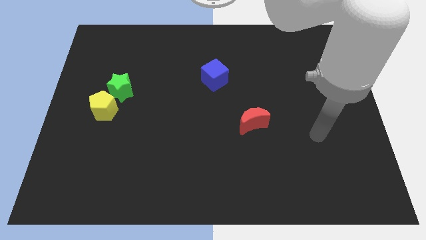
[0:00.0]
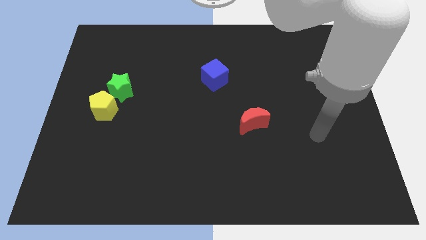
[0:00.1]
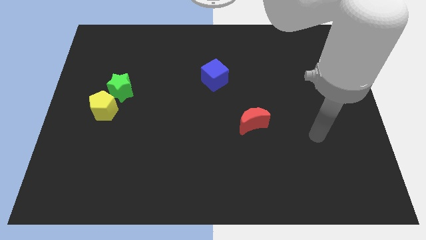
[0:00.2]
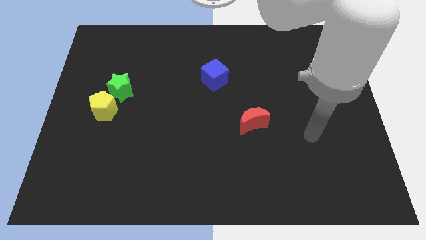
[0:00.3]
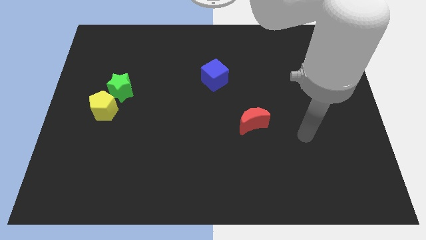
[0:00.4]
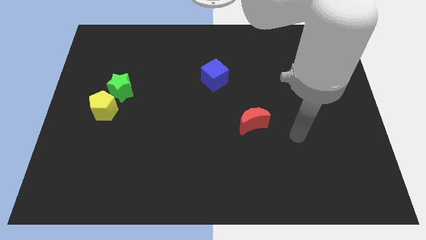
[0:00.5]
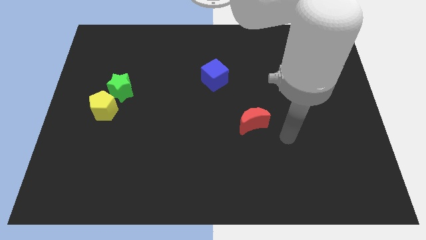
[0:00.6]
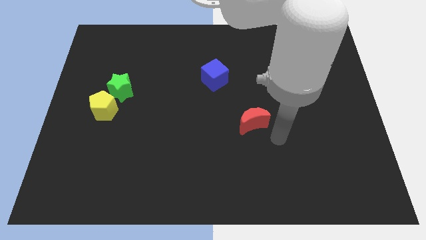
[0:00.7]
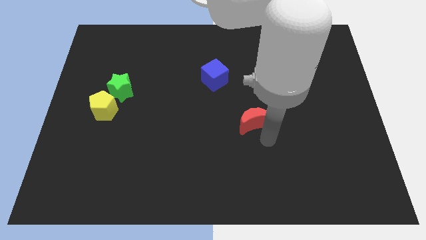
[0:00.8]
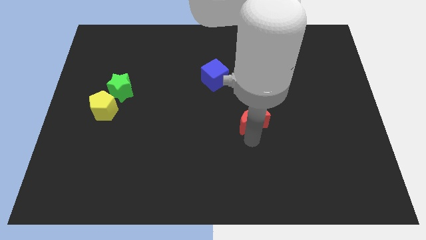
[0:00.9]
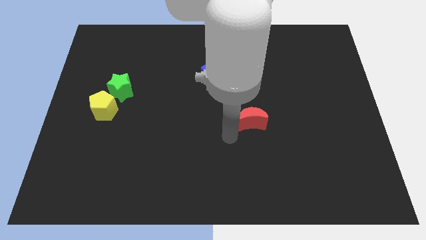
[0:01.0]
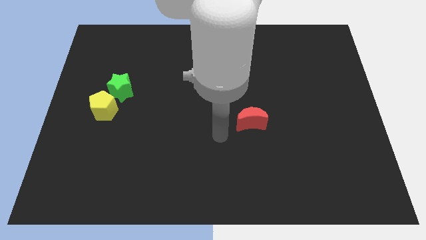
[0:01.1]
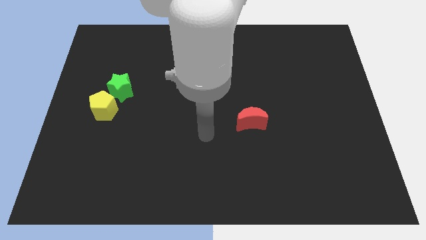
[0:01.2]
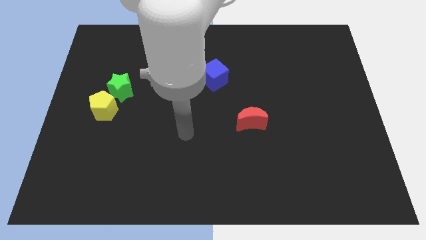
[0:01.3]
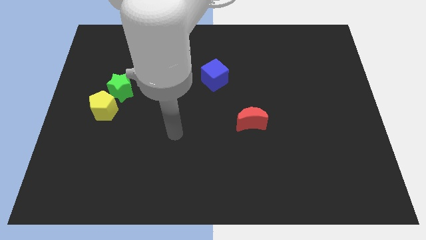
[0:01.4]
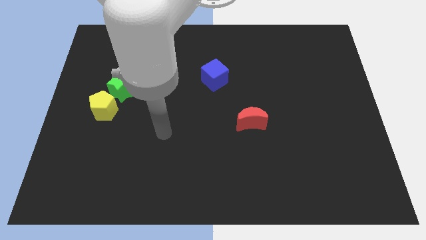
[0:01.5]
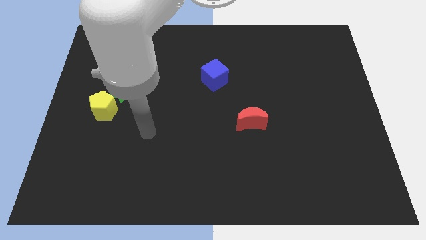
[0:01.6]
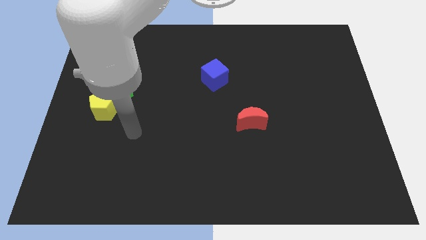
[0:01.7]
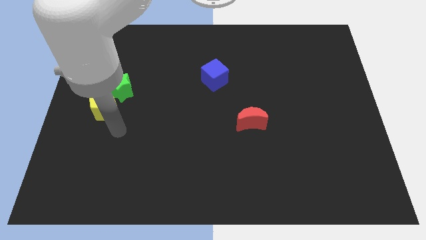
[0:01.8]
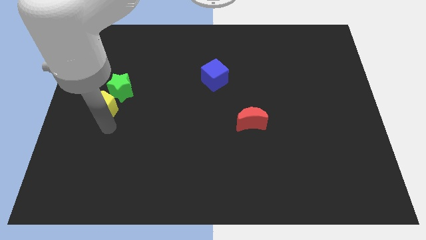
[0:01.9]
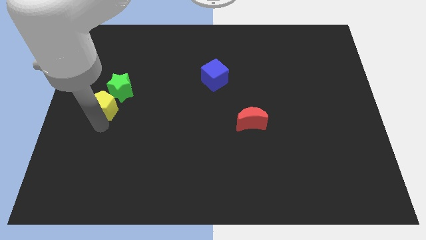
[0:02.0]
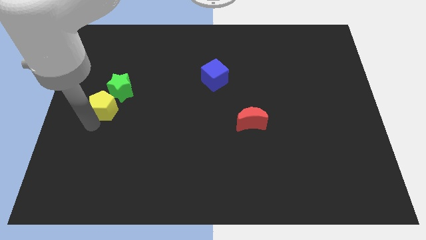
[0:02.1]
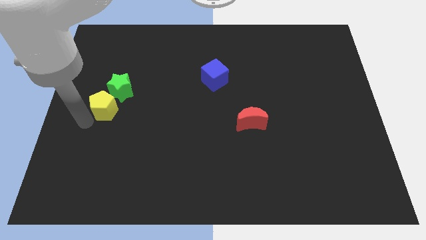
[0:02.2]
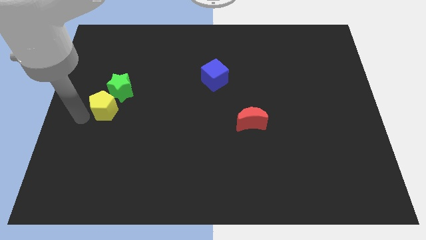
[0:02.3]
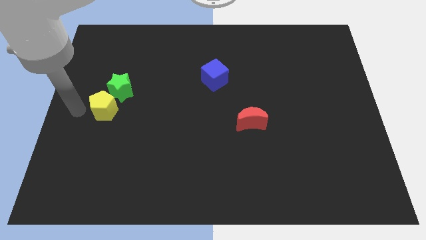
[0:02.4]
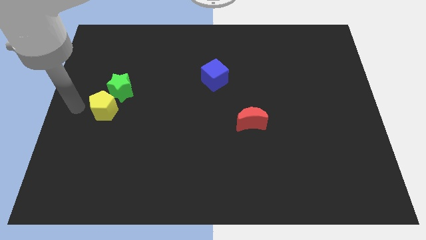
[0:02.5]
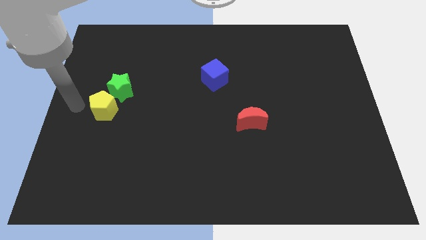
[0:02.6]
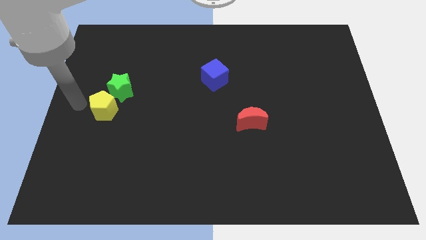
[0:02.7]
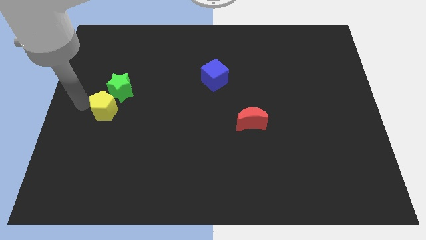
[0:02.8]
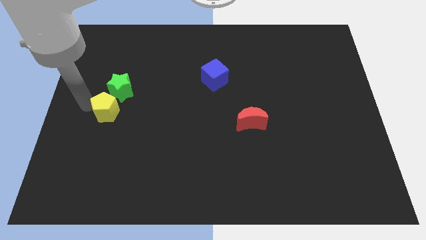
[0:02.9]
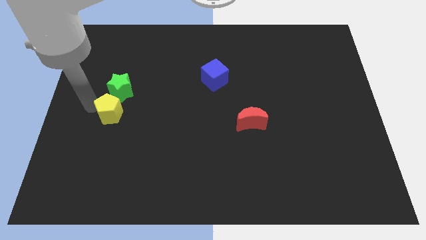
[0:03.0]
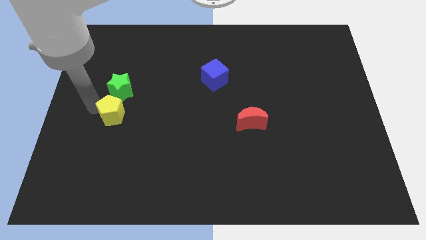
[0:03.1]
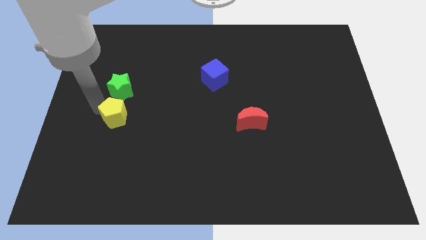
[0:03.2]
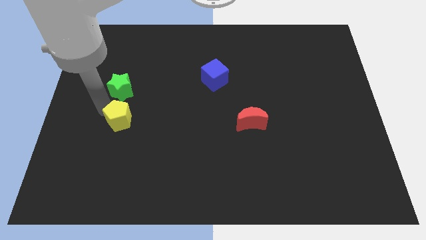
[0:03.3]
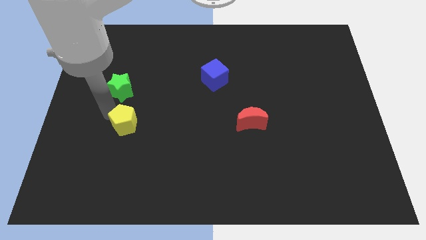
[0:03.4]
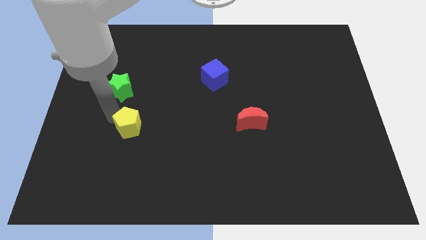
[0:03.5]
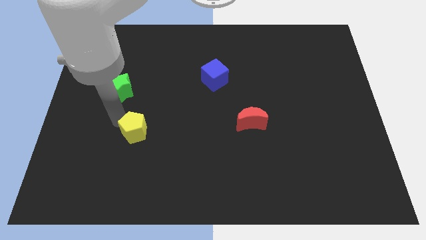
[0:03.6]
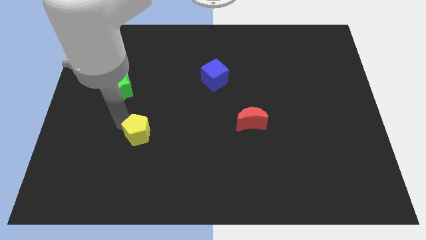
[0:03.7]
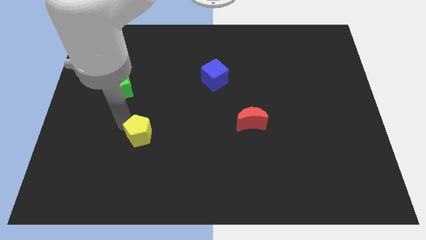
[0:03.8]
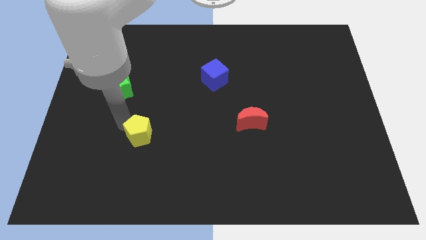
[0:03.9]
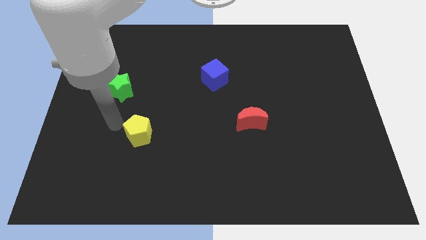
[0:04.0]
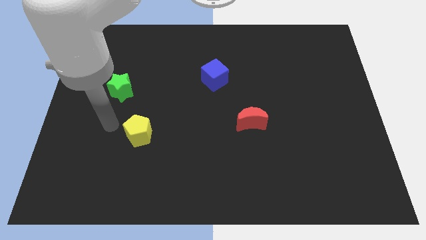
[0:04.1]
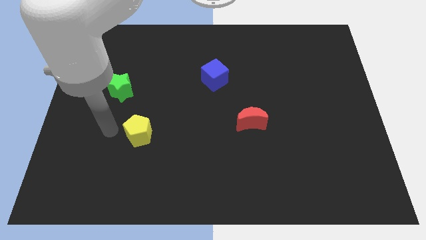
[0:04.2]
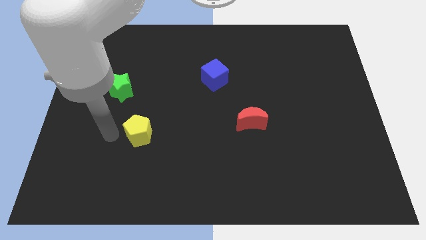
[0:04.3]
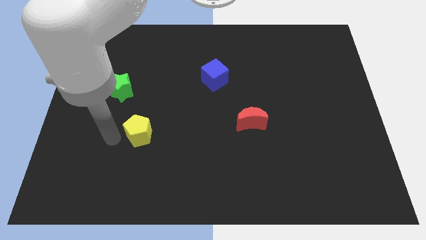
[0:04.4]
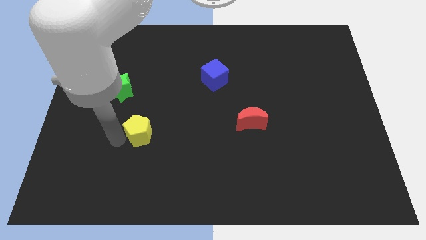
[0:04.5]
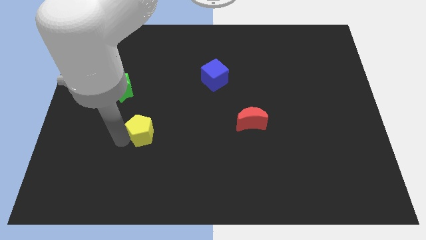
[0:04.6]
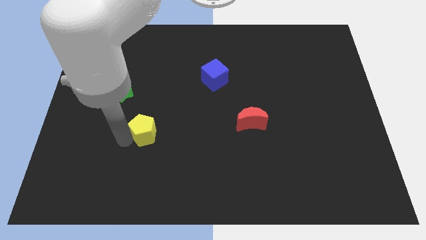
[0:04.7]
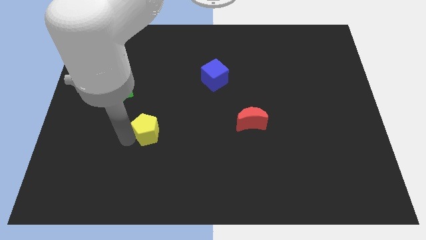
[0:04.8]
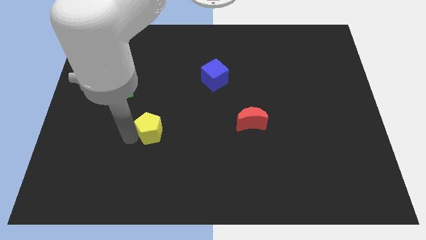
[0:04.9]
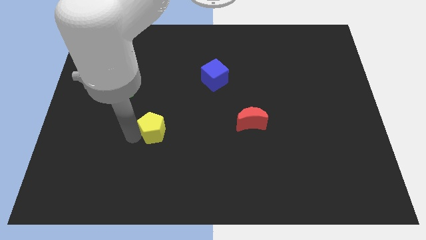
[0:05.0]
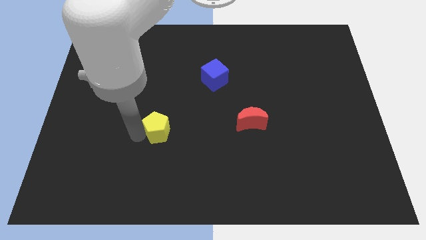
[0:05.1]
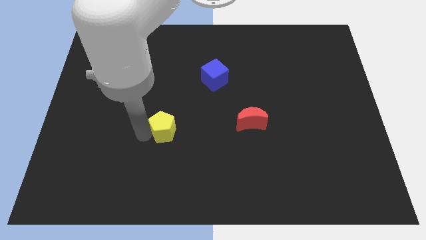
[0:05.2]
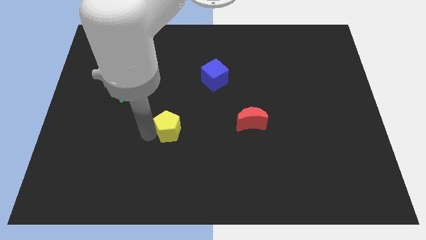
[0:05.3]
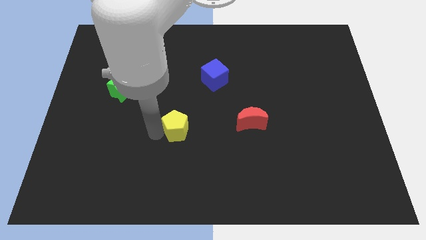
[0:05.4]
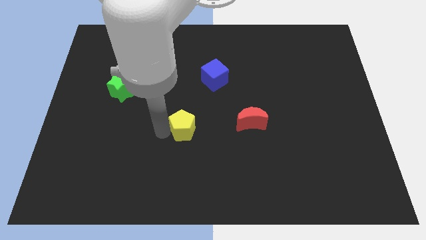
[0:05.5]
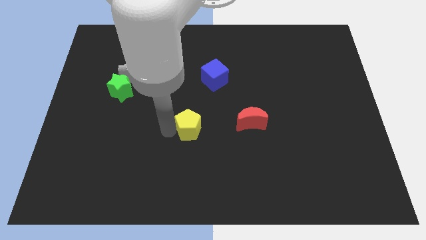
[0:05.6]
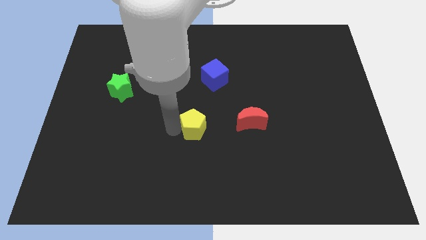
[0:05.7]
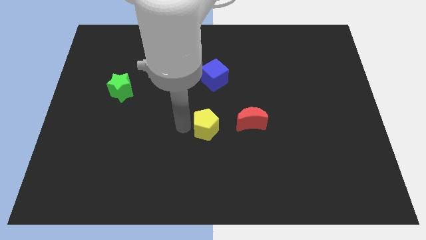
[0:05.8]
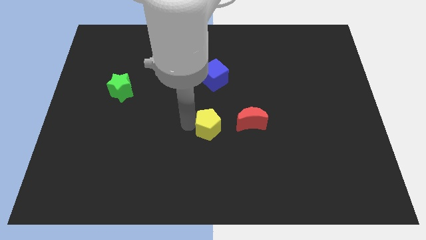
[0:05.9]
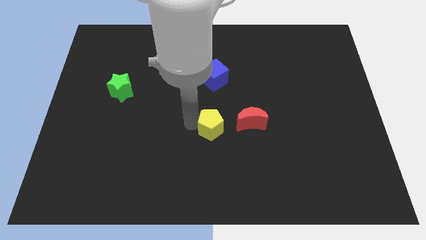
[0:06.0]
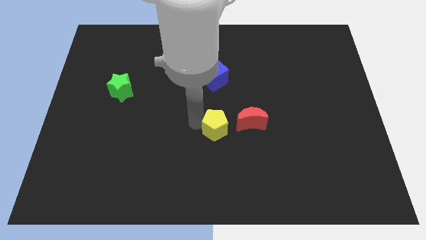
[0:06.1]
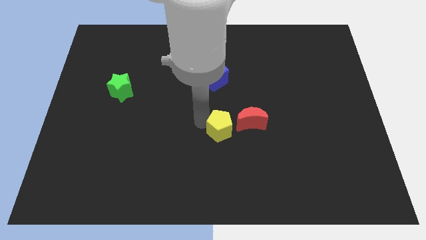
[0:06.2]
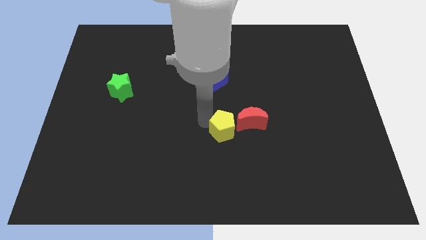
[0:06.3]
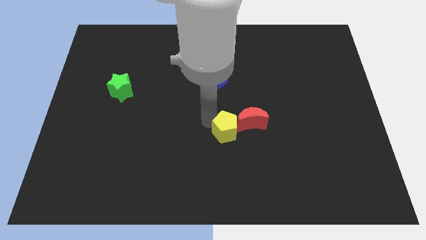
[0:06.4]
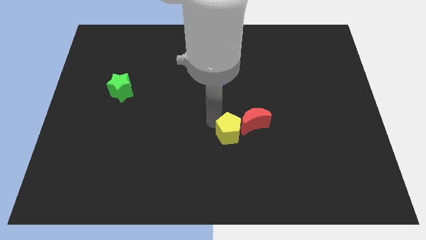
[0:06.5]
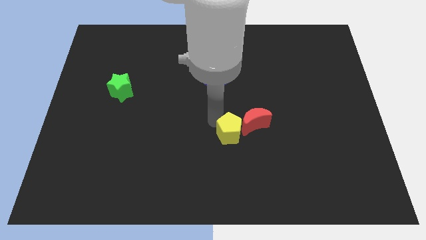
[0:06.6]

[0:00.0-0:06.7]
push the pentagon to the red moon

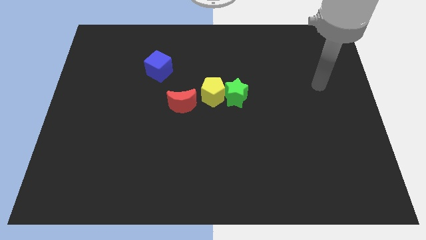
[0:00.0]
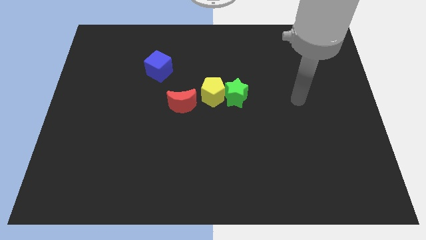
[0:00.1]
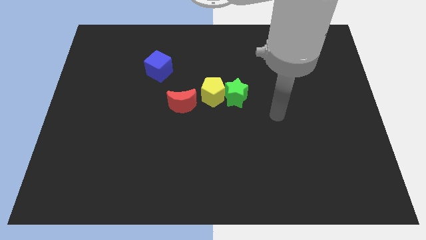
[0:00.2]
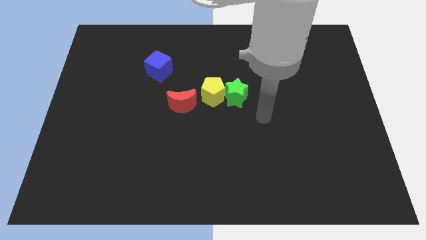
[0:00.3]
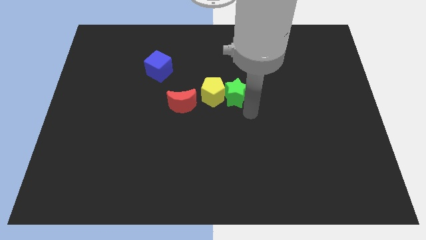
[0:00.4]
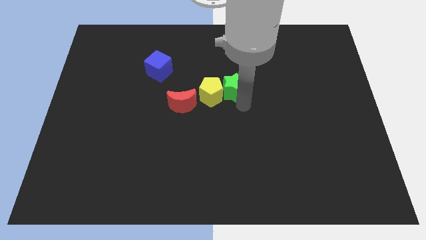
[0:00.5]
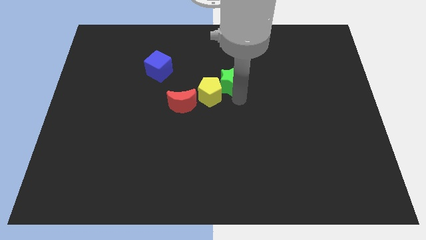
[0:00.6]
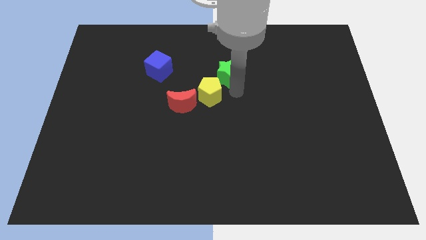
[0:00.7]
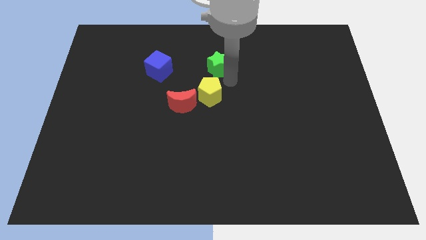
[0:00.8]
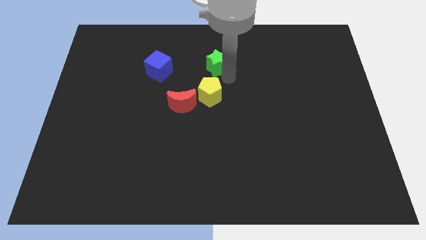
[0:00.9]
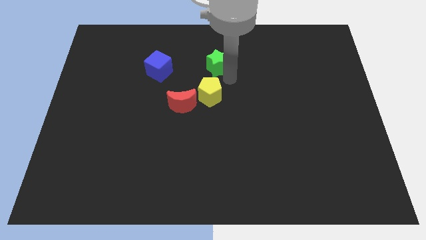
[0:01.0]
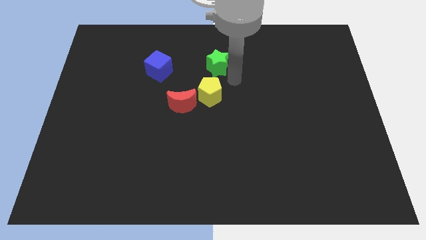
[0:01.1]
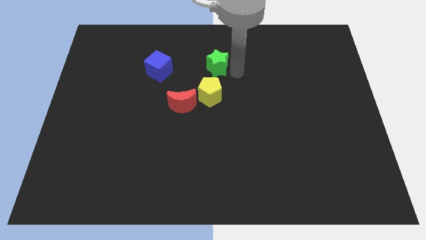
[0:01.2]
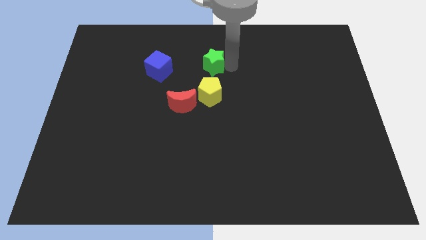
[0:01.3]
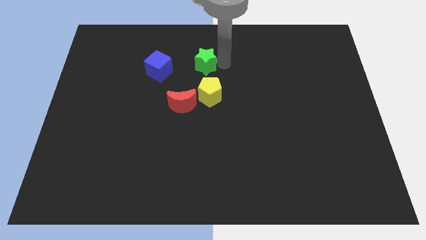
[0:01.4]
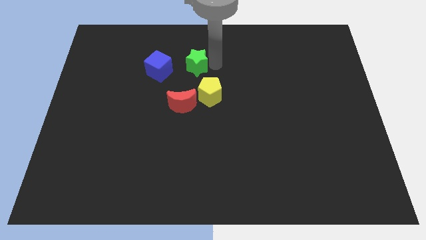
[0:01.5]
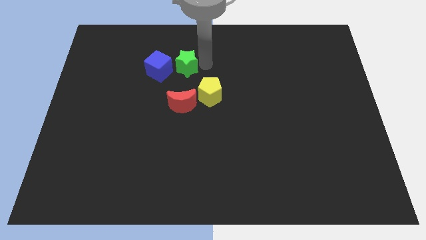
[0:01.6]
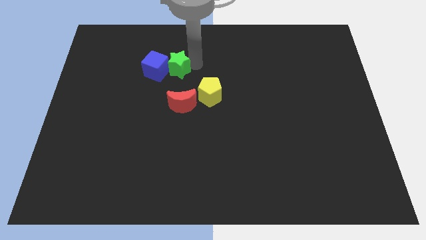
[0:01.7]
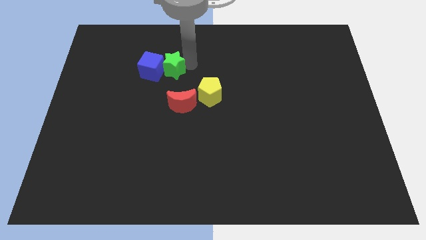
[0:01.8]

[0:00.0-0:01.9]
move the star towards the blue block
